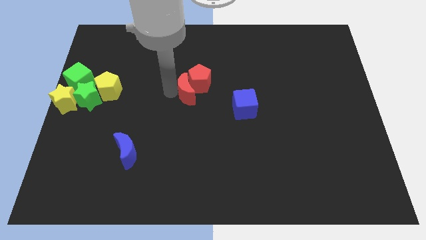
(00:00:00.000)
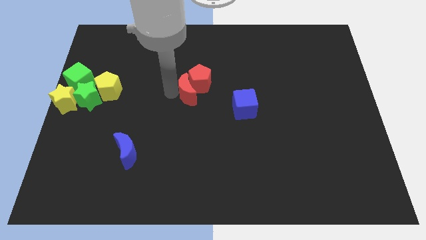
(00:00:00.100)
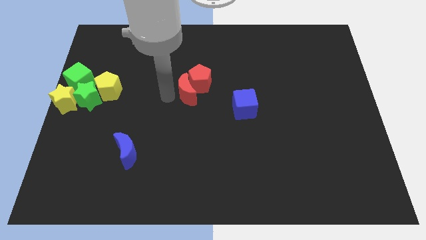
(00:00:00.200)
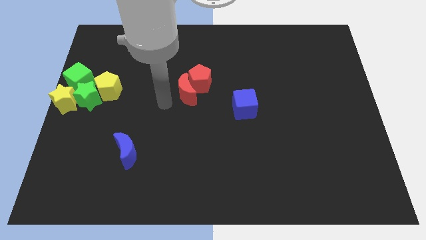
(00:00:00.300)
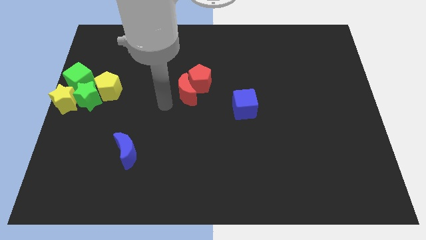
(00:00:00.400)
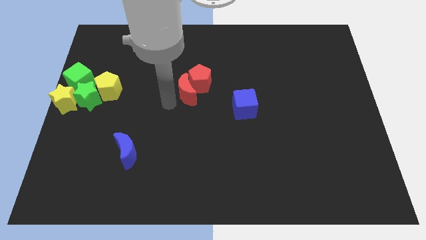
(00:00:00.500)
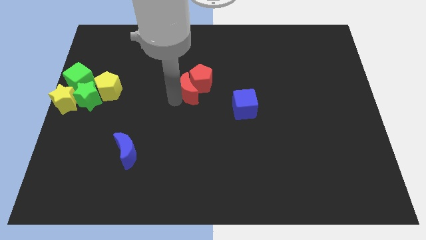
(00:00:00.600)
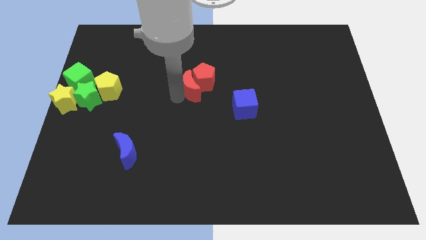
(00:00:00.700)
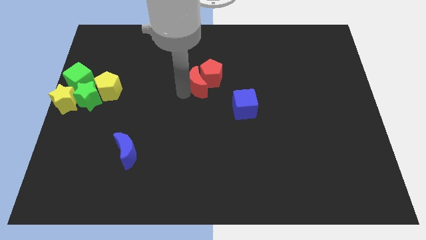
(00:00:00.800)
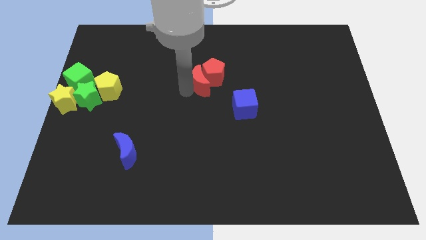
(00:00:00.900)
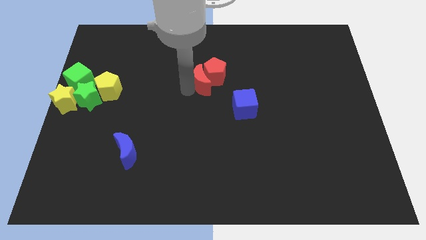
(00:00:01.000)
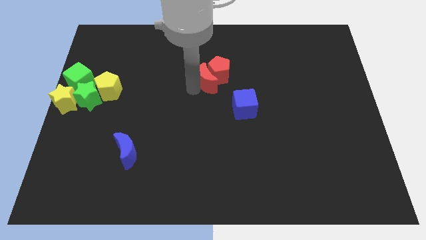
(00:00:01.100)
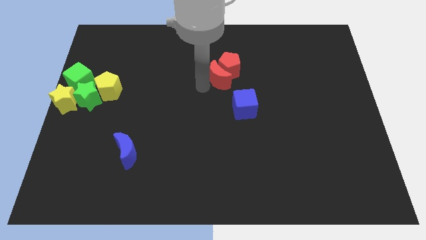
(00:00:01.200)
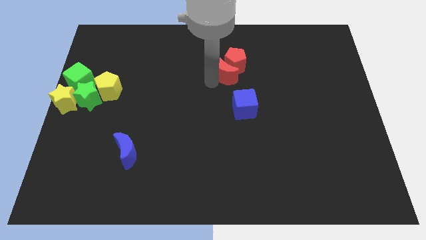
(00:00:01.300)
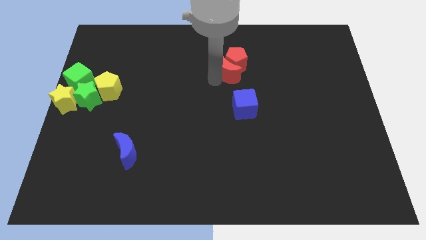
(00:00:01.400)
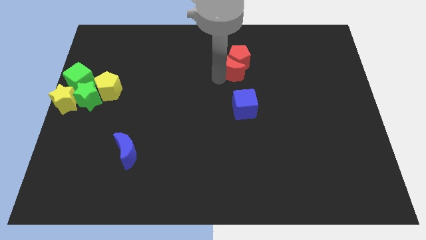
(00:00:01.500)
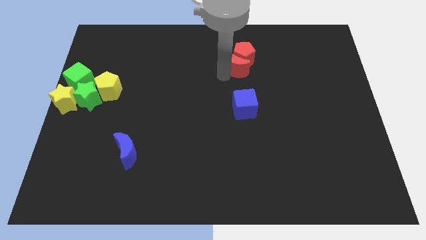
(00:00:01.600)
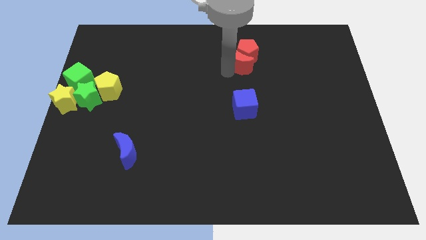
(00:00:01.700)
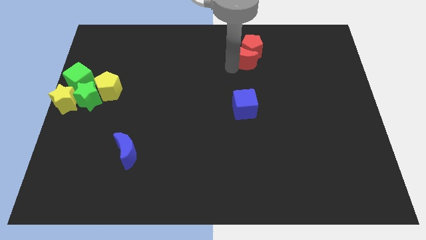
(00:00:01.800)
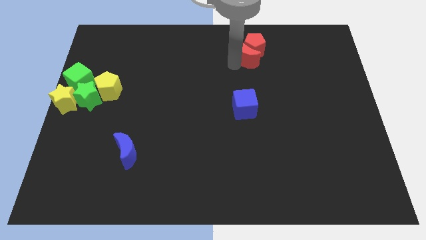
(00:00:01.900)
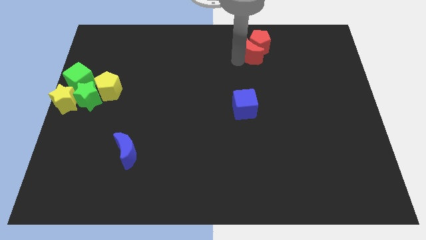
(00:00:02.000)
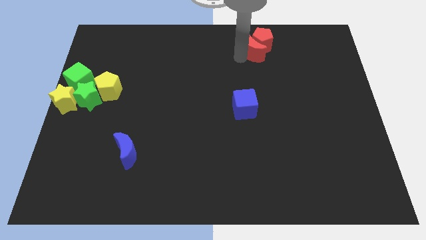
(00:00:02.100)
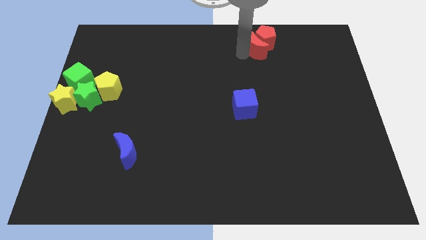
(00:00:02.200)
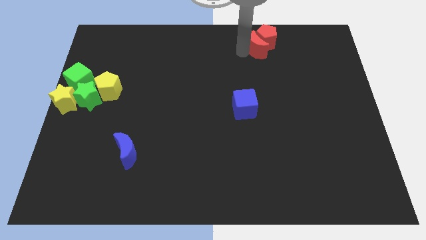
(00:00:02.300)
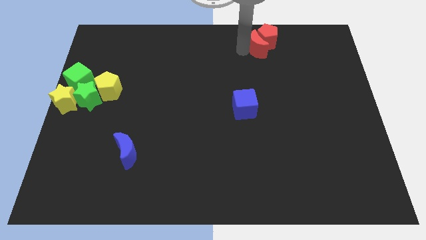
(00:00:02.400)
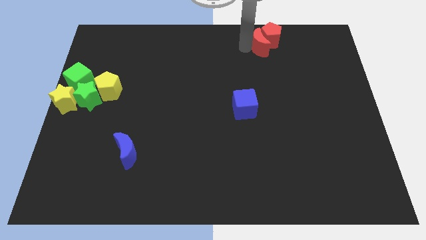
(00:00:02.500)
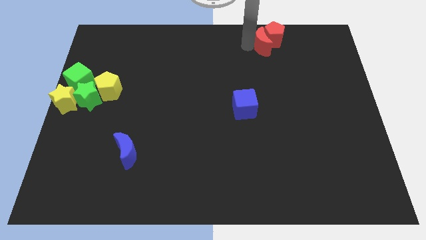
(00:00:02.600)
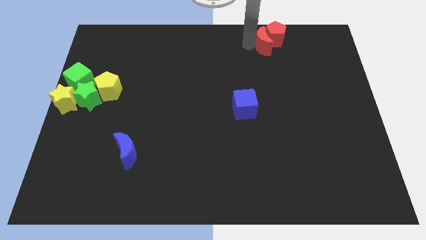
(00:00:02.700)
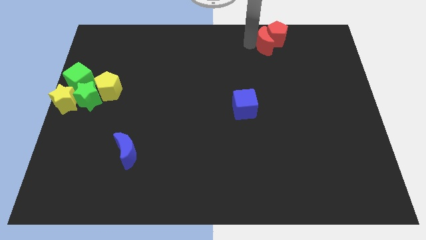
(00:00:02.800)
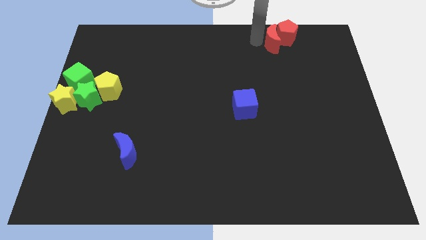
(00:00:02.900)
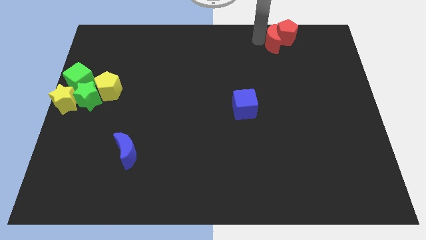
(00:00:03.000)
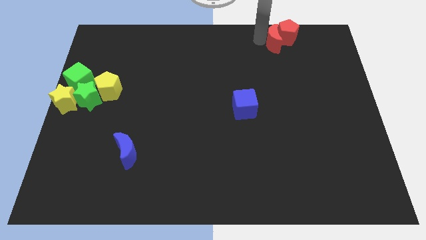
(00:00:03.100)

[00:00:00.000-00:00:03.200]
push the red moon and red pentagon towards top right side of the board

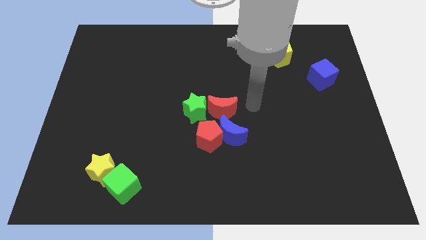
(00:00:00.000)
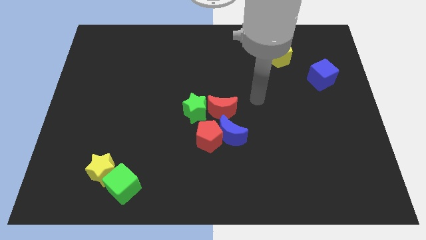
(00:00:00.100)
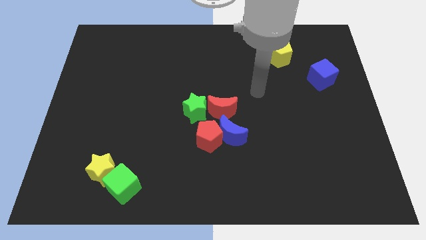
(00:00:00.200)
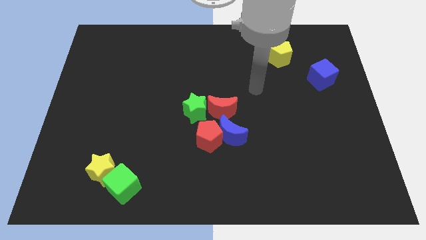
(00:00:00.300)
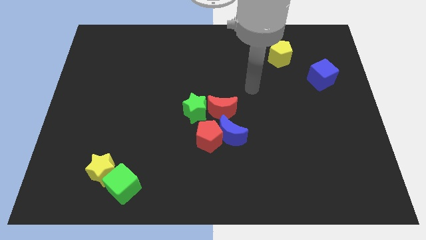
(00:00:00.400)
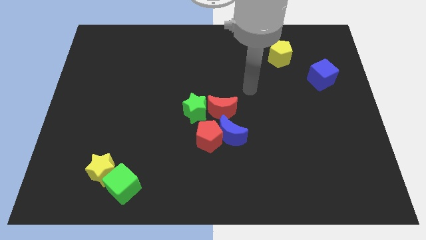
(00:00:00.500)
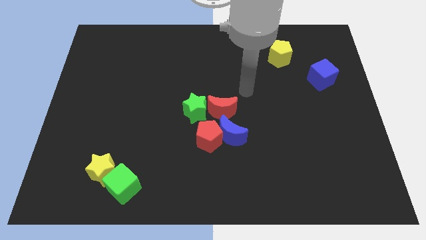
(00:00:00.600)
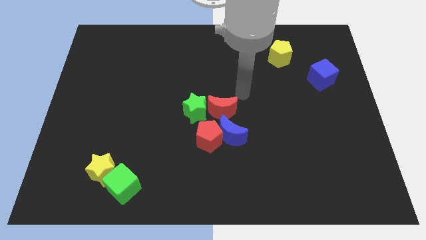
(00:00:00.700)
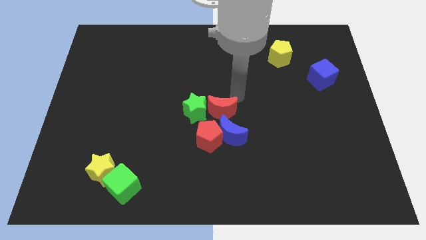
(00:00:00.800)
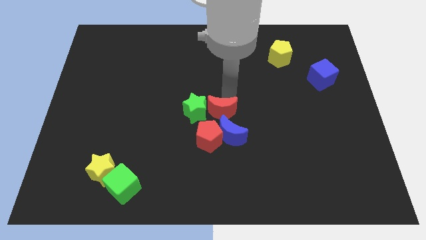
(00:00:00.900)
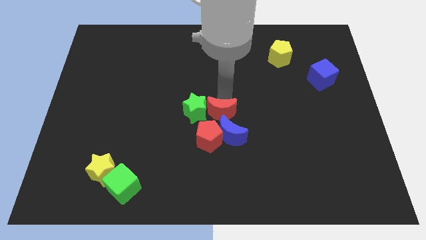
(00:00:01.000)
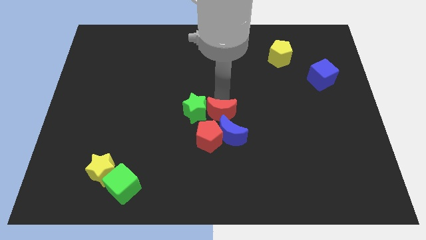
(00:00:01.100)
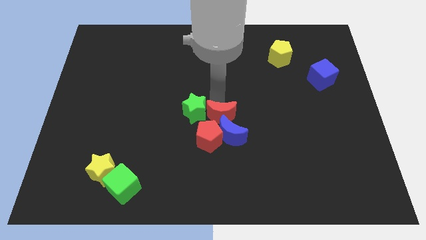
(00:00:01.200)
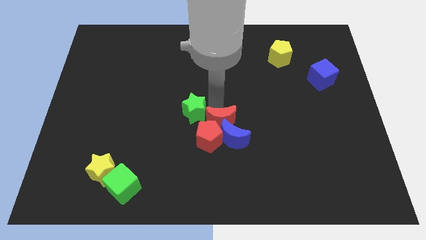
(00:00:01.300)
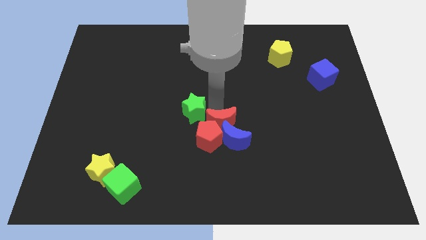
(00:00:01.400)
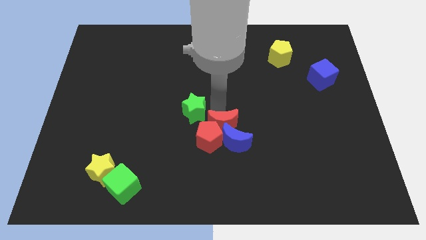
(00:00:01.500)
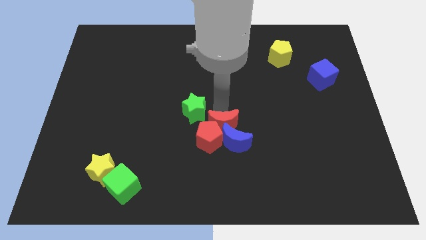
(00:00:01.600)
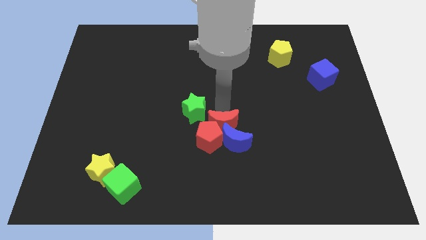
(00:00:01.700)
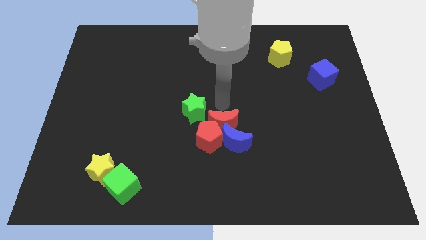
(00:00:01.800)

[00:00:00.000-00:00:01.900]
push the red crescent towards the blue crescent

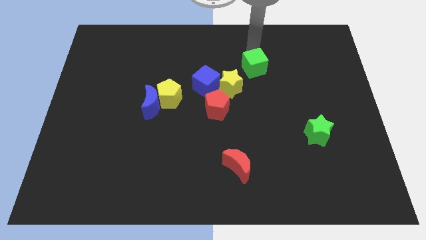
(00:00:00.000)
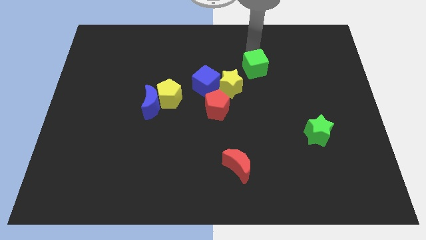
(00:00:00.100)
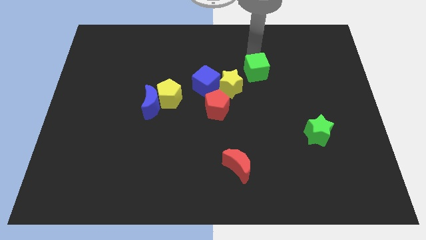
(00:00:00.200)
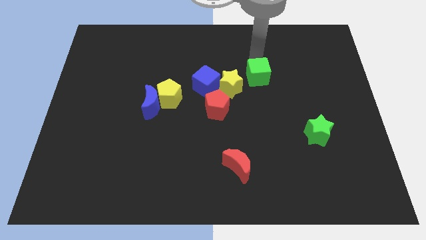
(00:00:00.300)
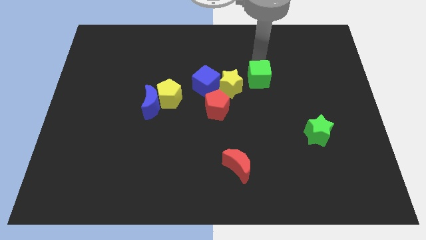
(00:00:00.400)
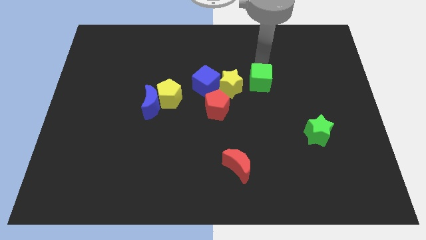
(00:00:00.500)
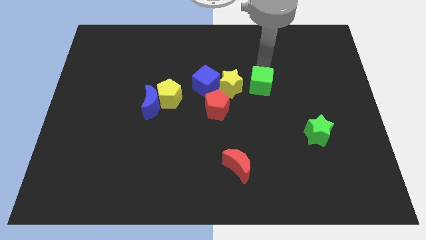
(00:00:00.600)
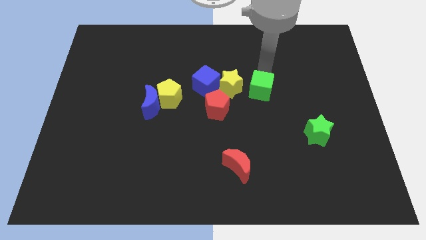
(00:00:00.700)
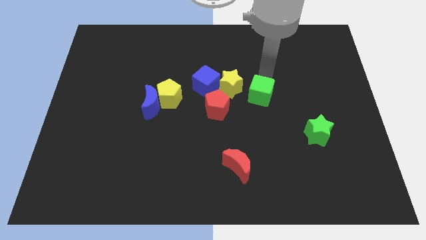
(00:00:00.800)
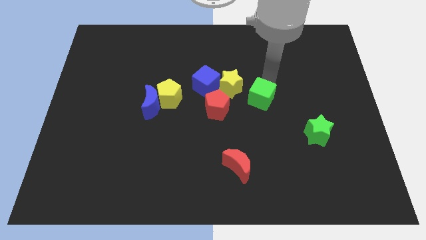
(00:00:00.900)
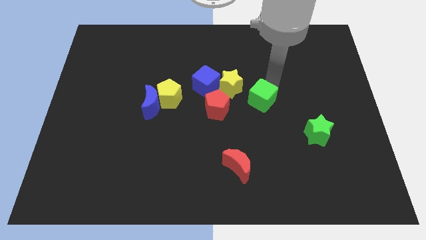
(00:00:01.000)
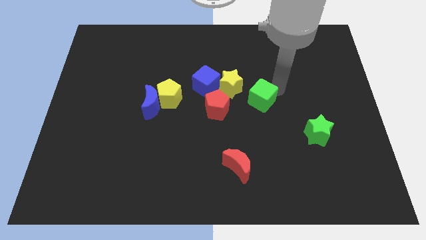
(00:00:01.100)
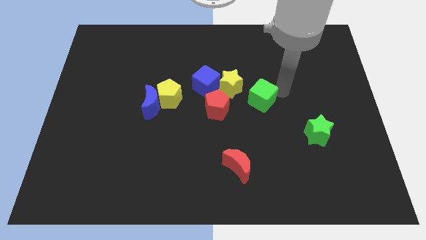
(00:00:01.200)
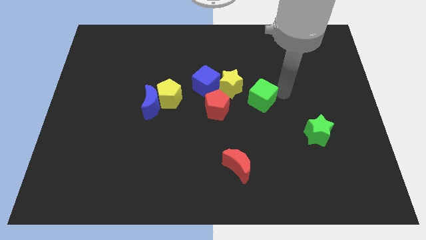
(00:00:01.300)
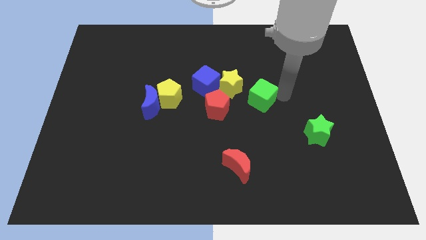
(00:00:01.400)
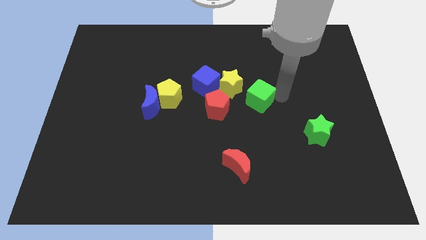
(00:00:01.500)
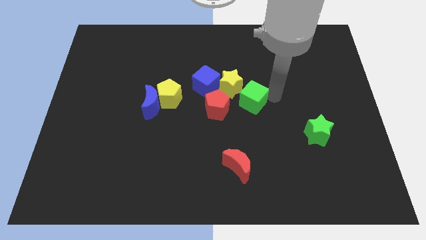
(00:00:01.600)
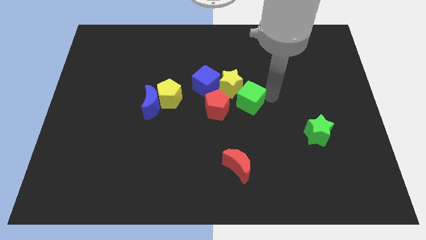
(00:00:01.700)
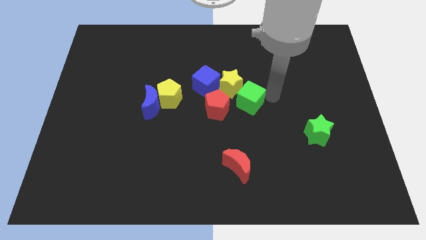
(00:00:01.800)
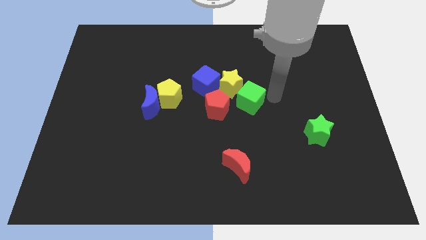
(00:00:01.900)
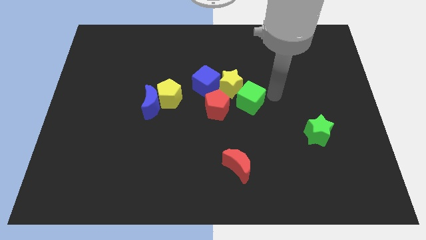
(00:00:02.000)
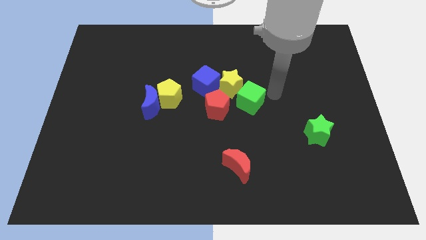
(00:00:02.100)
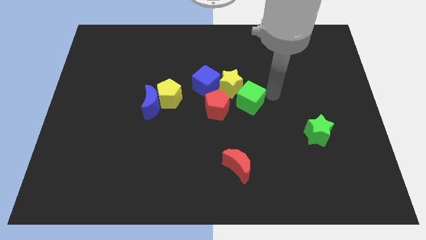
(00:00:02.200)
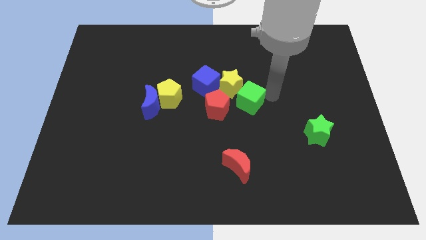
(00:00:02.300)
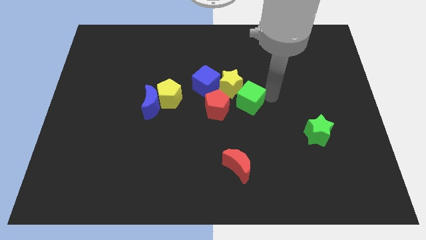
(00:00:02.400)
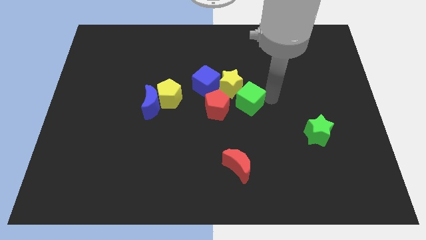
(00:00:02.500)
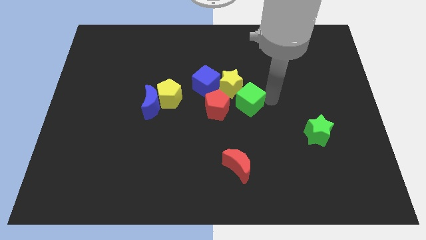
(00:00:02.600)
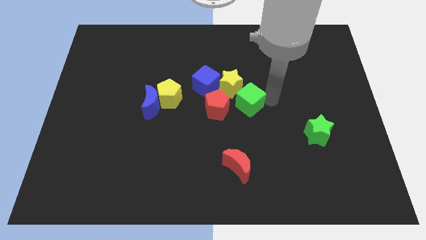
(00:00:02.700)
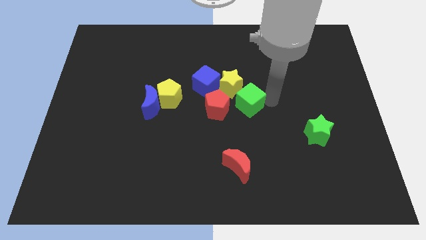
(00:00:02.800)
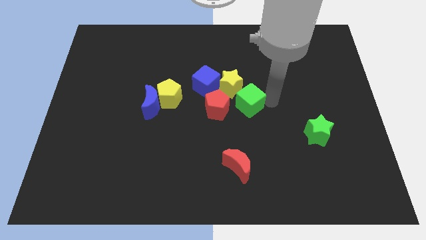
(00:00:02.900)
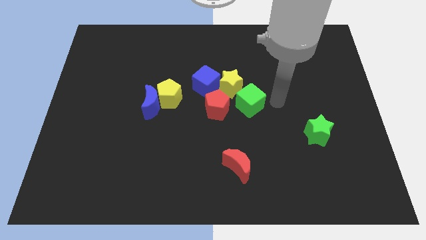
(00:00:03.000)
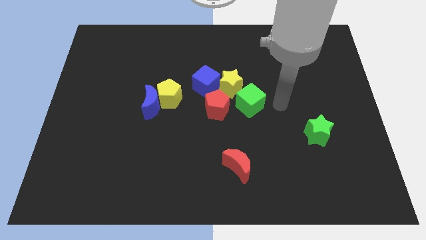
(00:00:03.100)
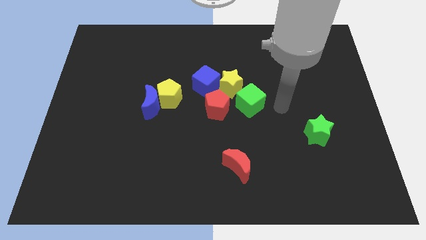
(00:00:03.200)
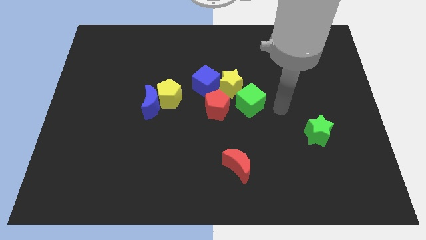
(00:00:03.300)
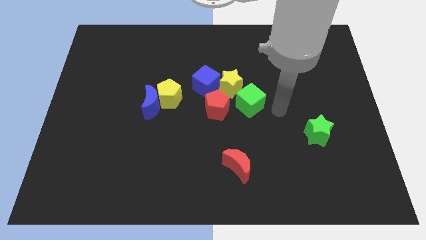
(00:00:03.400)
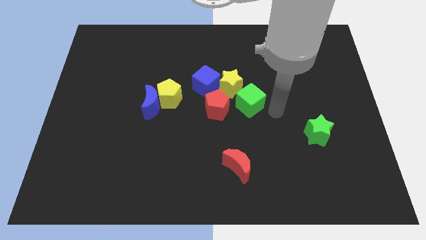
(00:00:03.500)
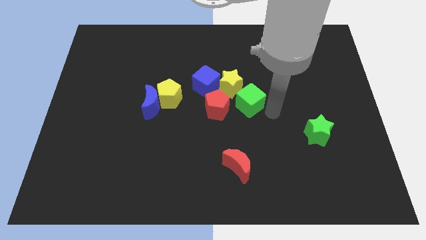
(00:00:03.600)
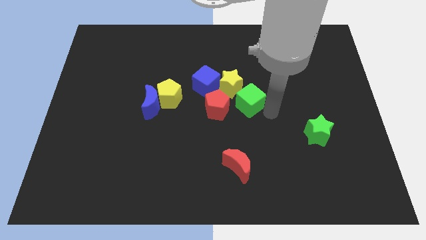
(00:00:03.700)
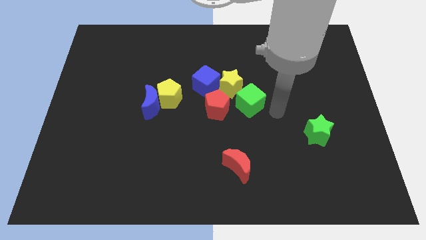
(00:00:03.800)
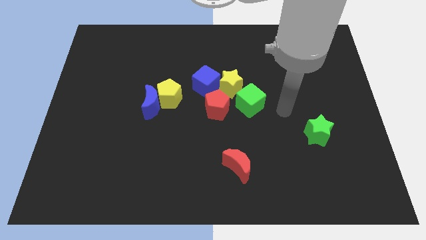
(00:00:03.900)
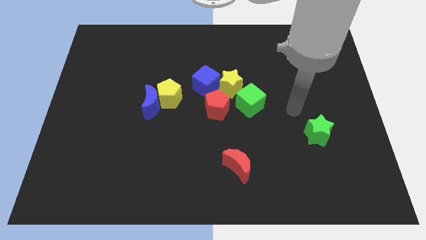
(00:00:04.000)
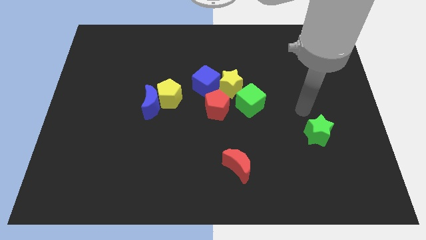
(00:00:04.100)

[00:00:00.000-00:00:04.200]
place green block right of red pentagon
